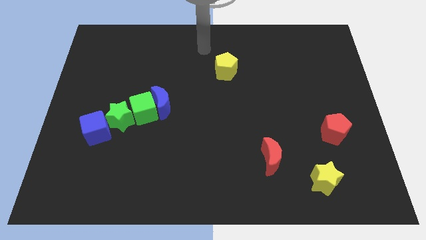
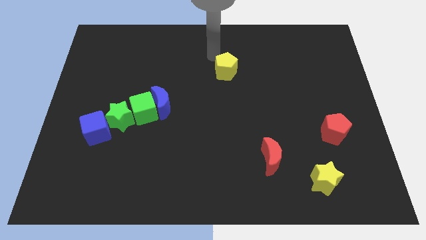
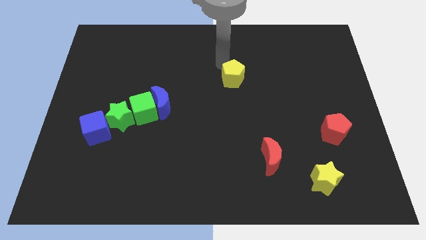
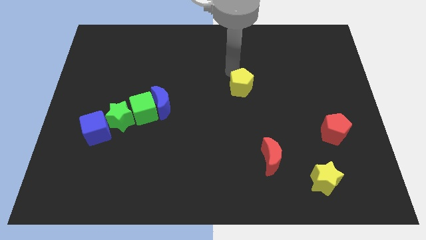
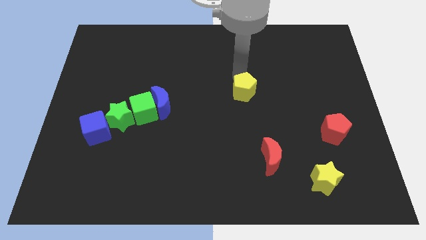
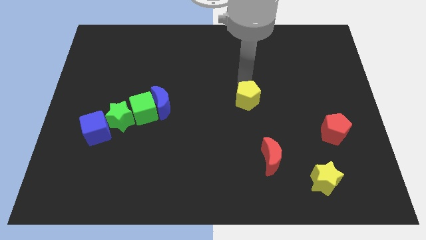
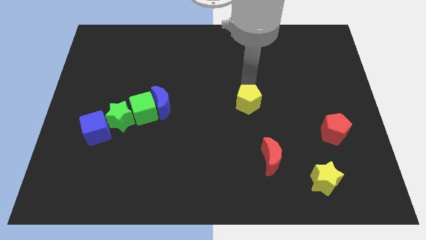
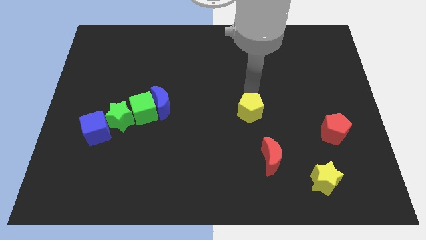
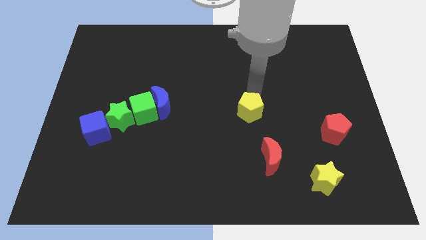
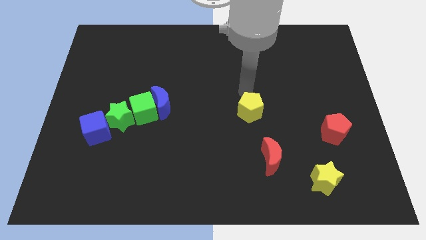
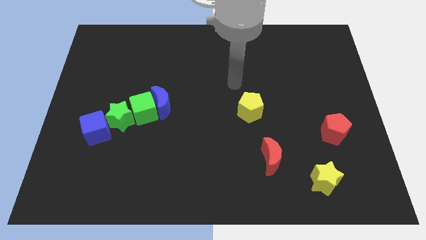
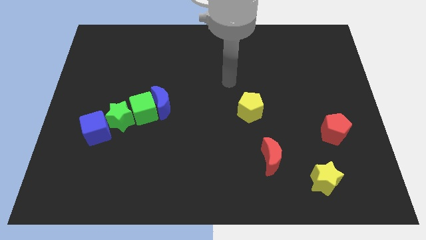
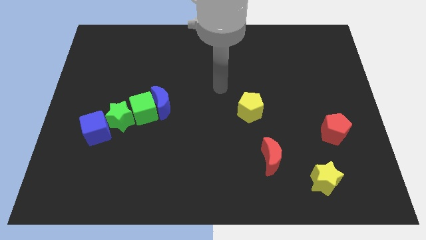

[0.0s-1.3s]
slide the yellow pentagon slightly towards the red crescent

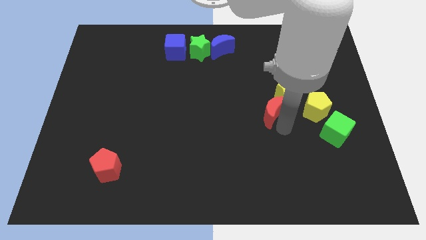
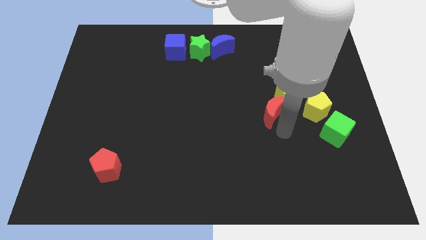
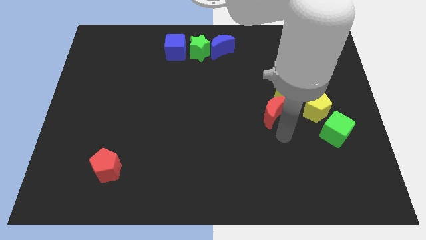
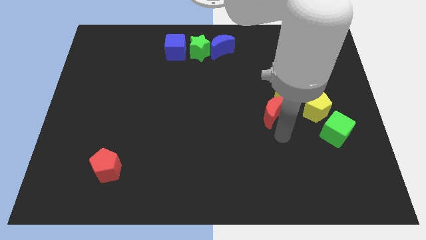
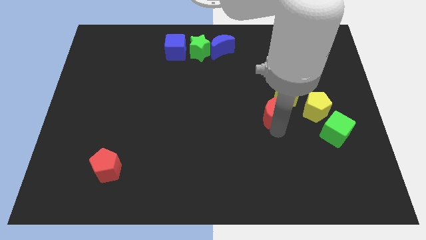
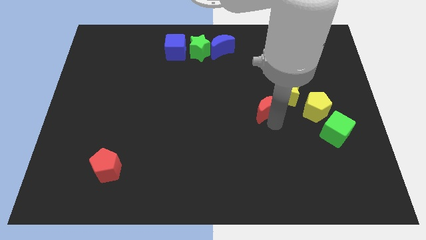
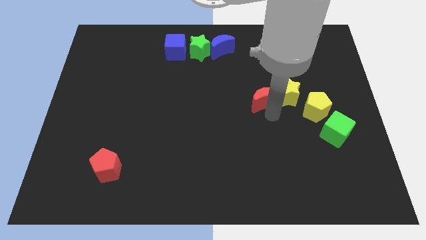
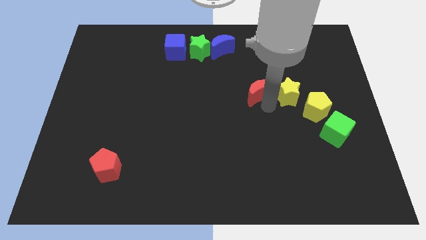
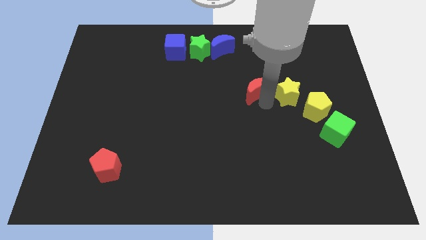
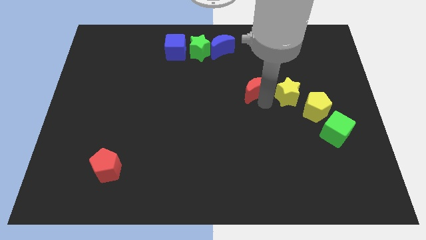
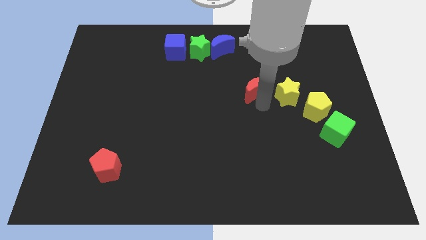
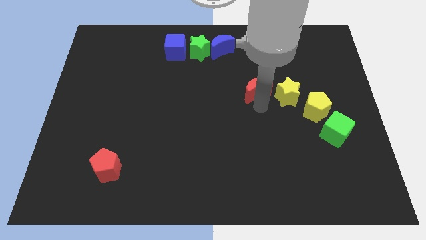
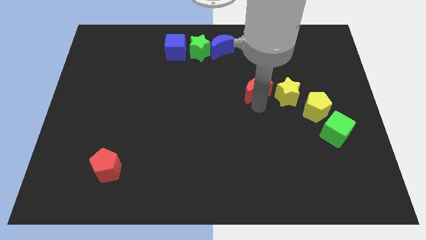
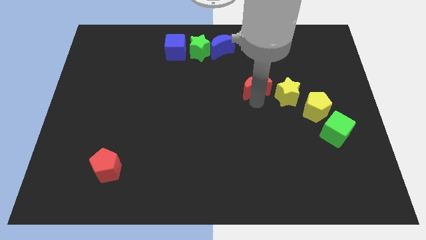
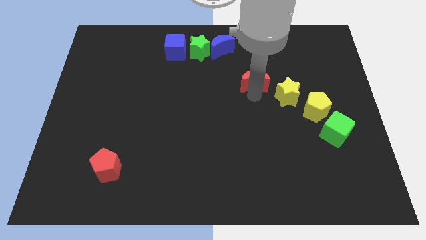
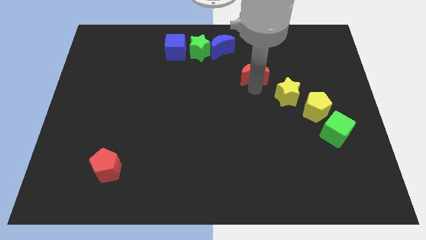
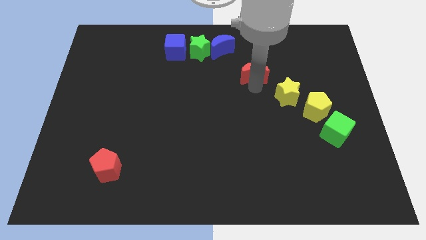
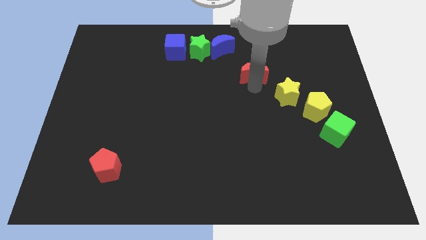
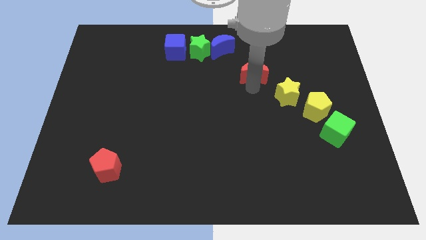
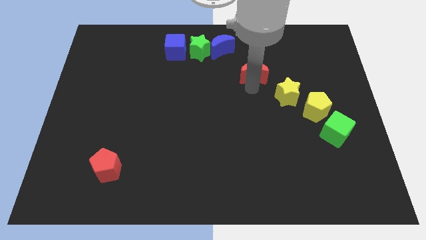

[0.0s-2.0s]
separate the red crescent from the yellow star

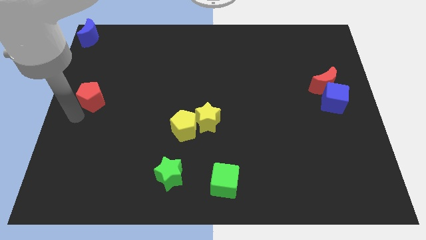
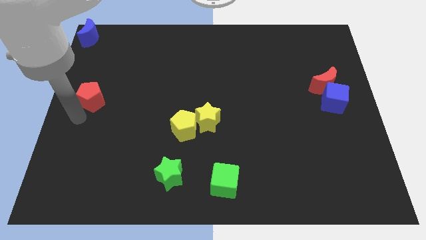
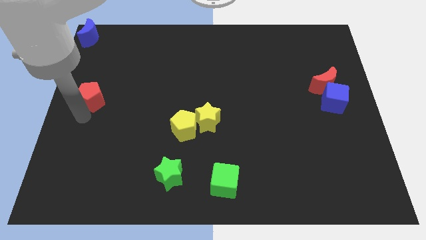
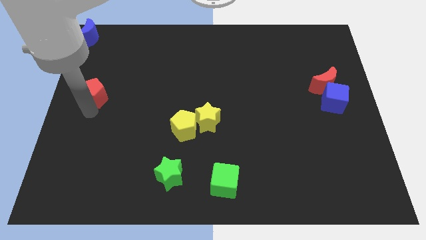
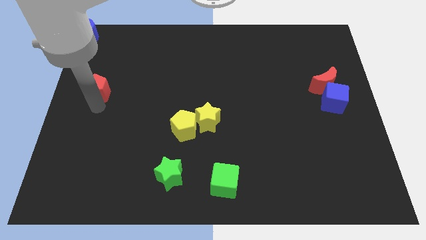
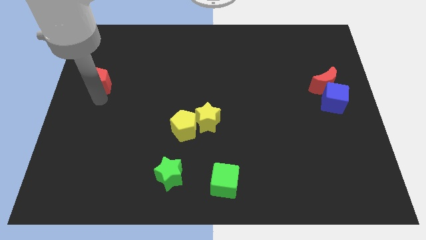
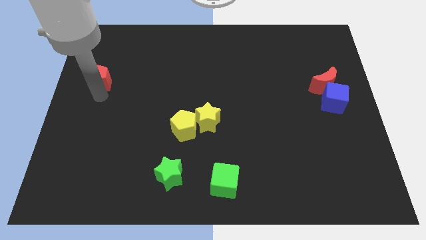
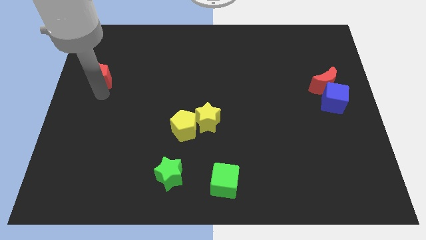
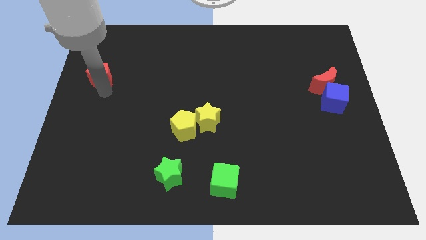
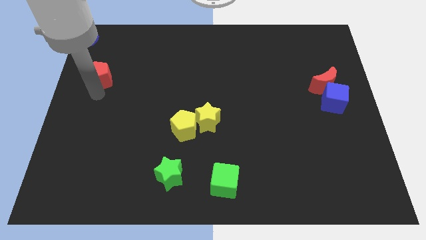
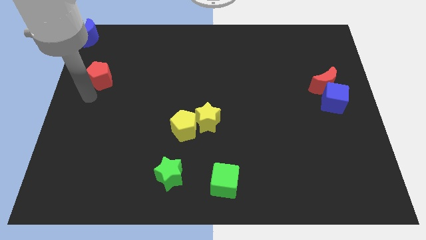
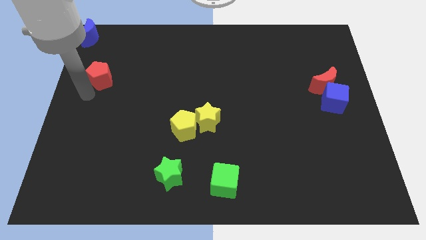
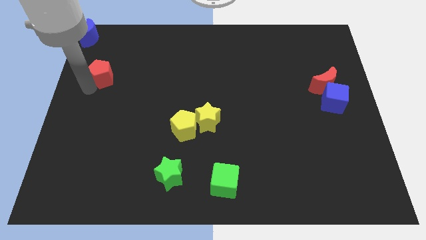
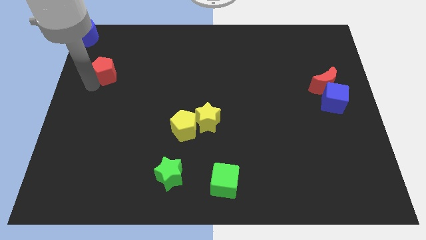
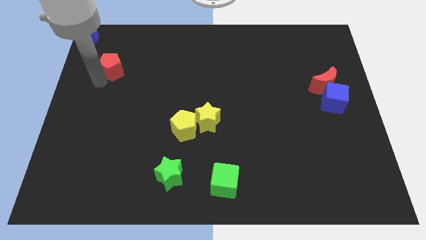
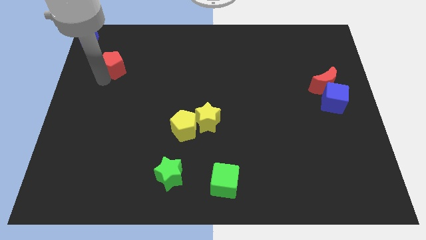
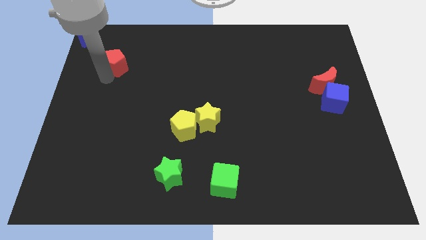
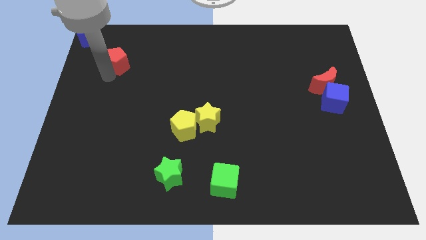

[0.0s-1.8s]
push the red pentagon upward

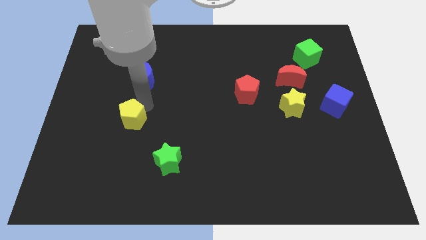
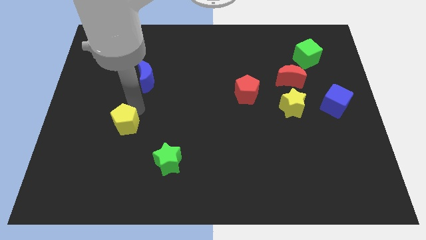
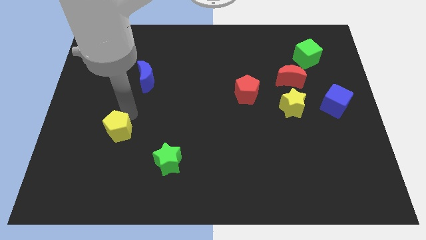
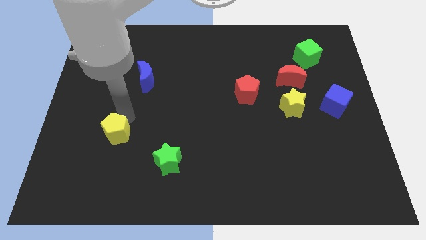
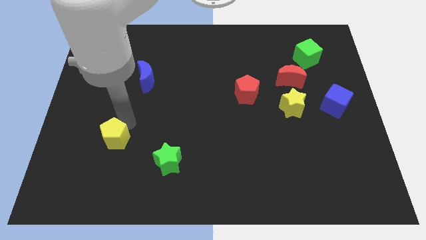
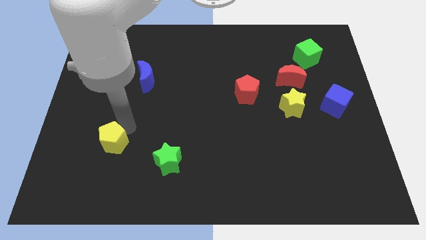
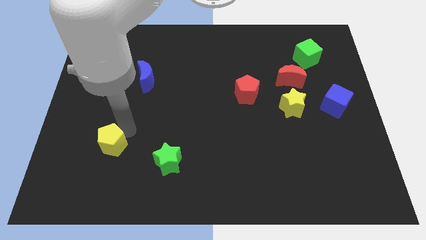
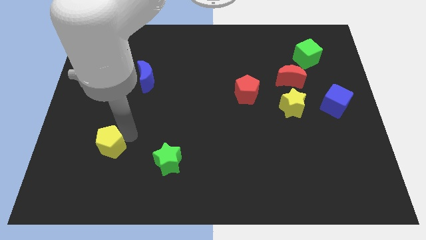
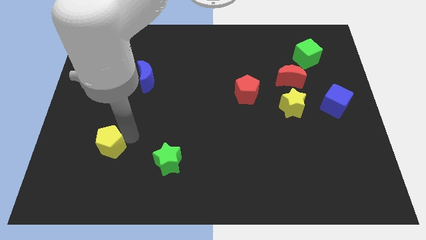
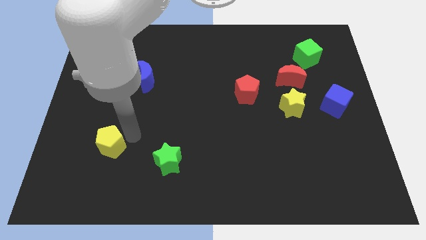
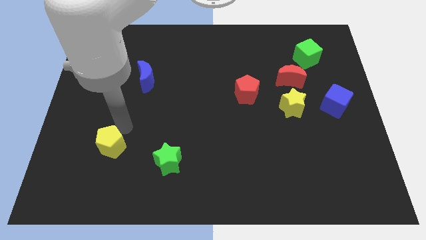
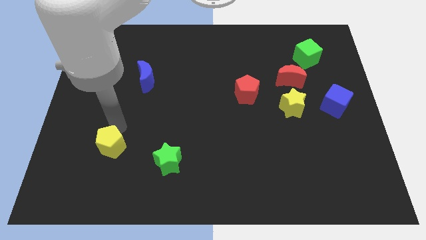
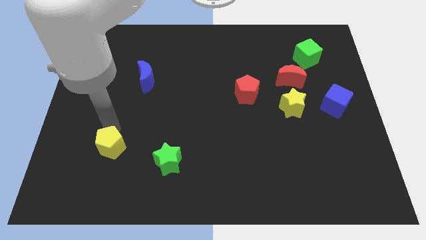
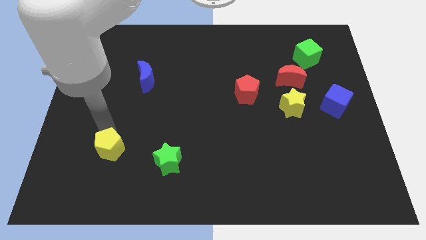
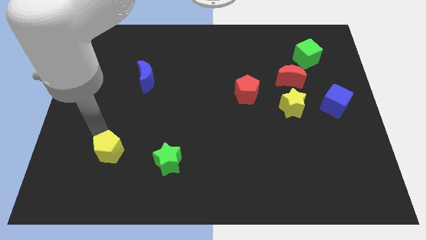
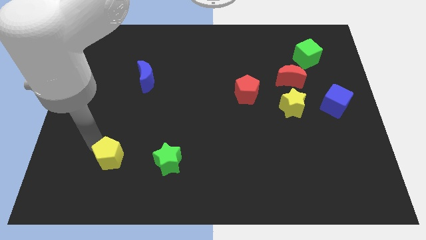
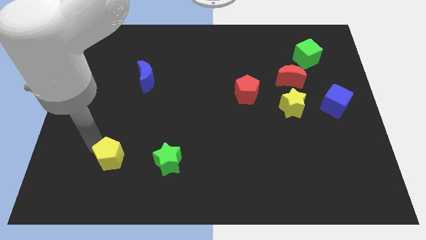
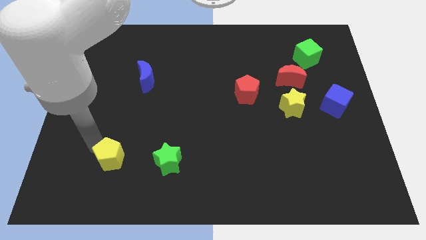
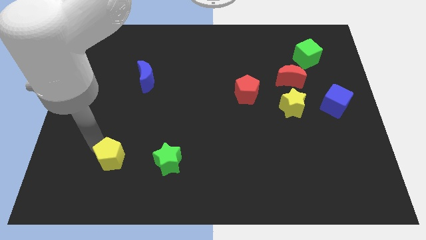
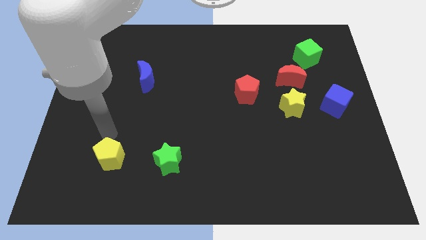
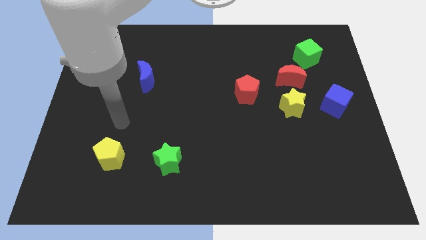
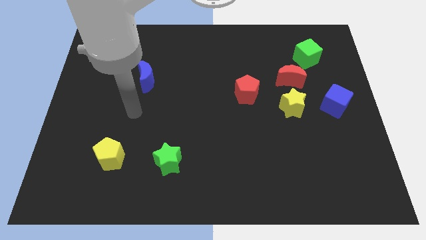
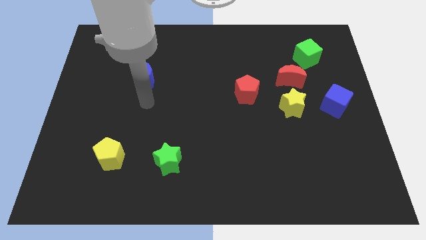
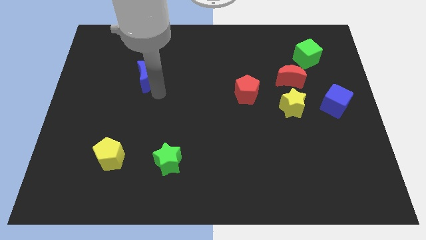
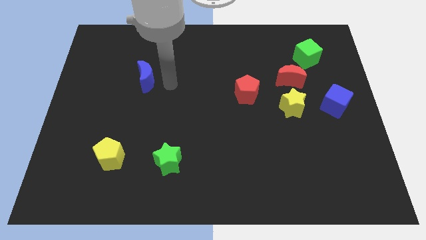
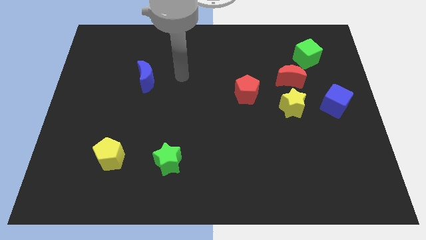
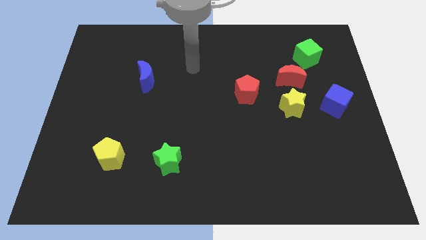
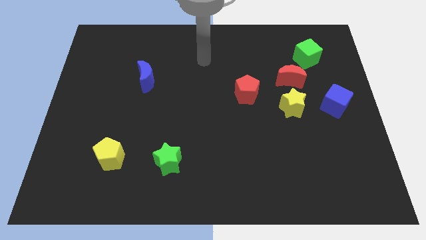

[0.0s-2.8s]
move the yellow pentago horizontally to the left of the green star and go away

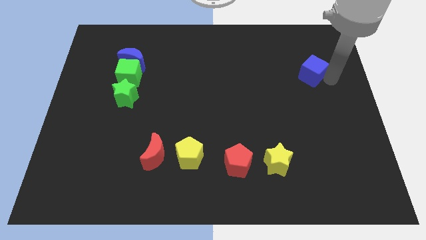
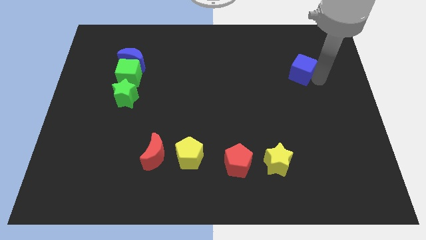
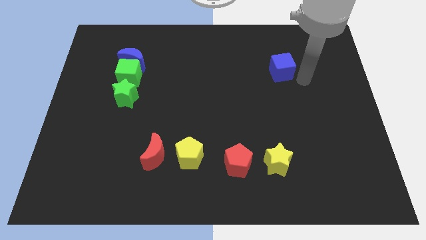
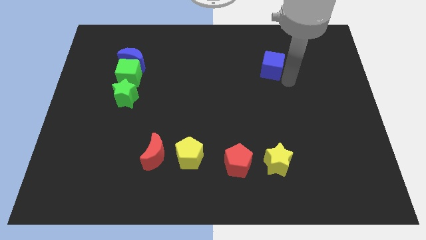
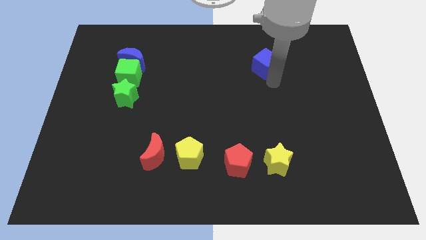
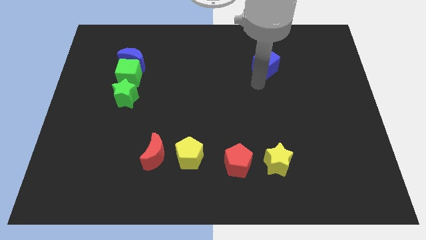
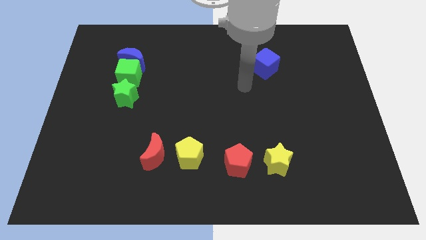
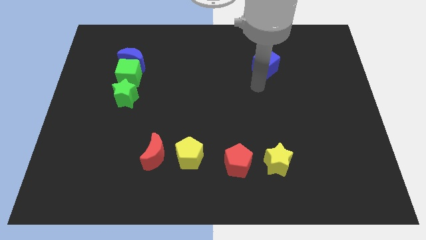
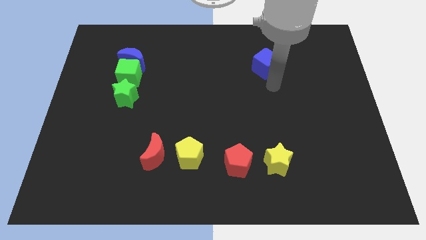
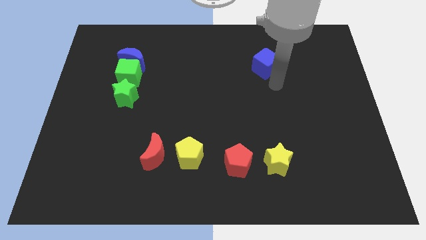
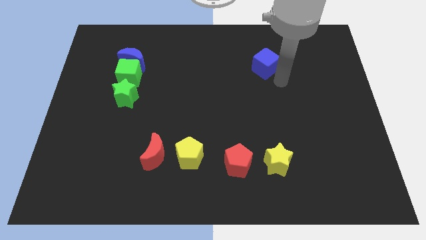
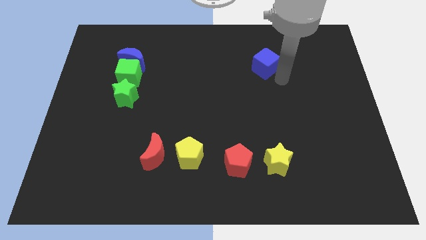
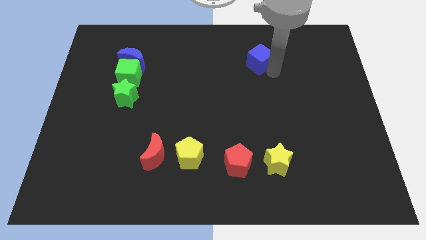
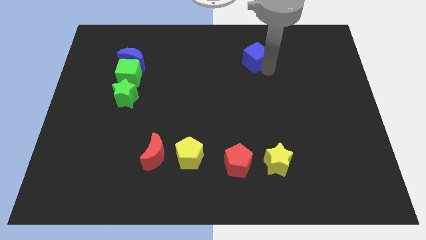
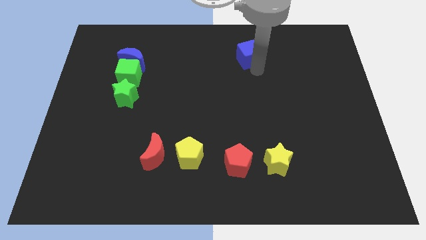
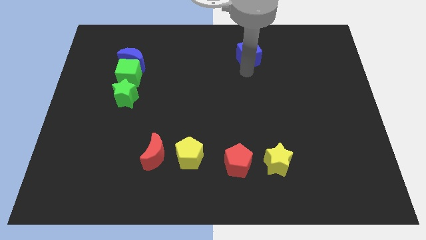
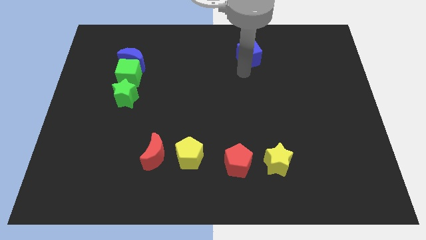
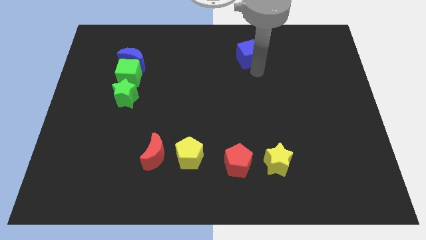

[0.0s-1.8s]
slide the blue cube vertically above the red pentagon
